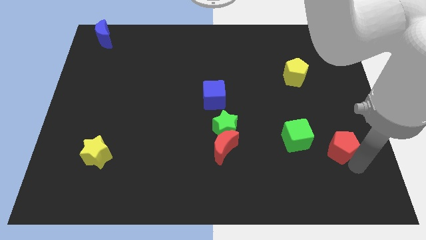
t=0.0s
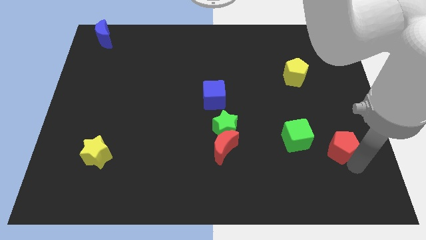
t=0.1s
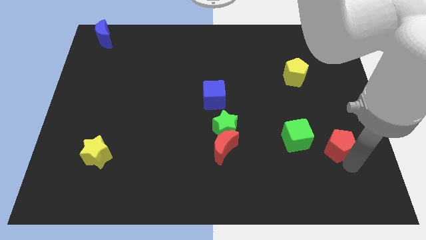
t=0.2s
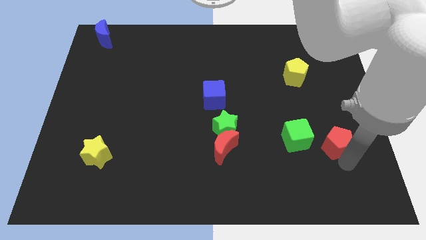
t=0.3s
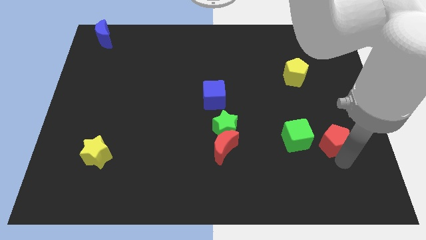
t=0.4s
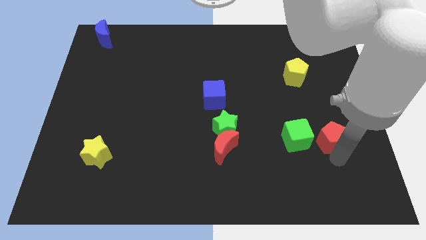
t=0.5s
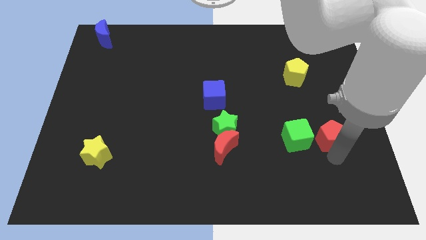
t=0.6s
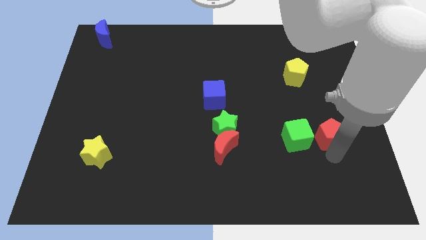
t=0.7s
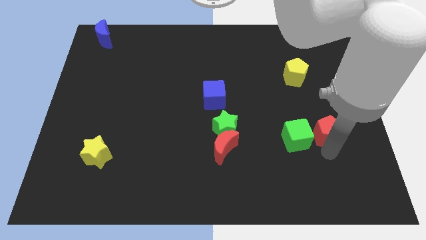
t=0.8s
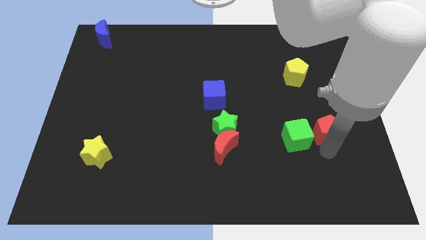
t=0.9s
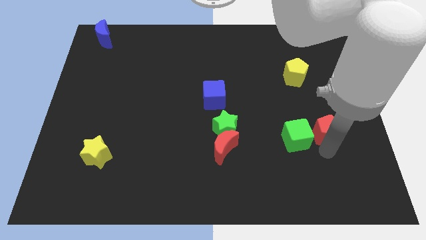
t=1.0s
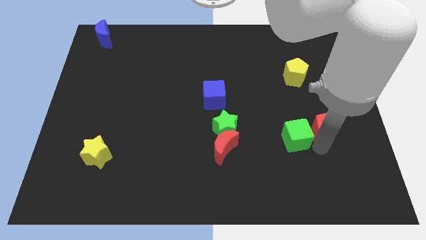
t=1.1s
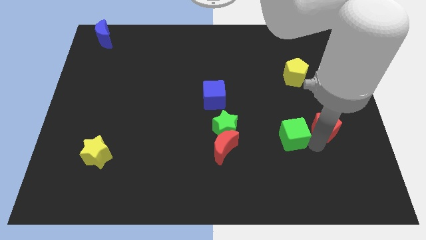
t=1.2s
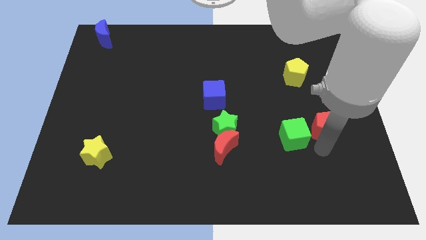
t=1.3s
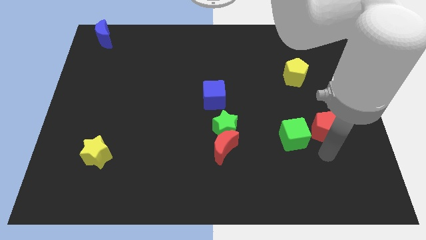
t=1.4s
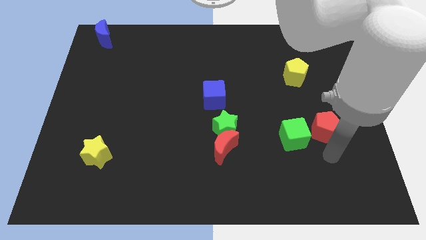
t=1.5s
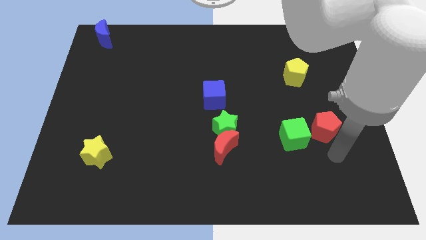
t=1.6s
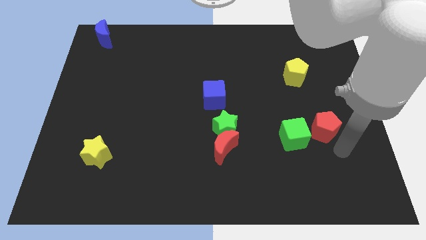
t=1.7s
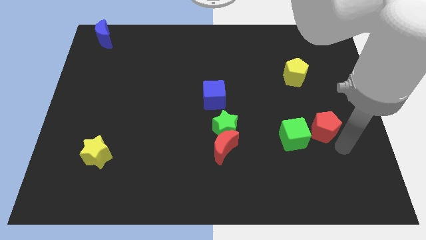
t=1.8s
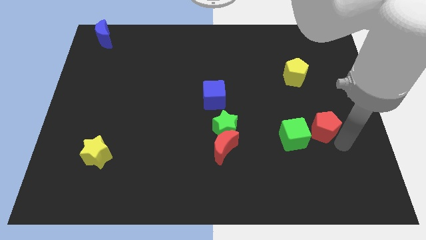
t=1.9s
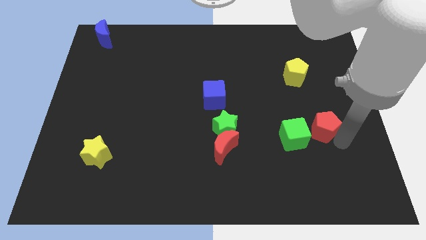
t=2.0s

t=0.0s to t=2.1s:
move the red pentagon to the right of the green cube

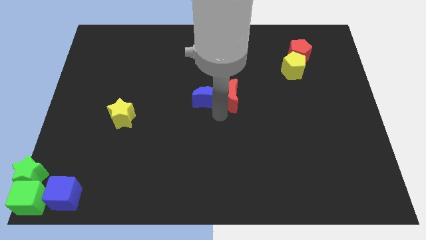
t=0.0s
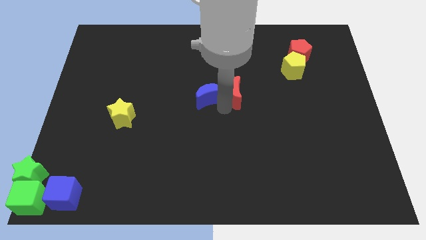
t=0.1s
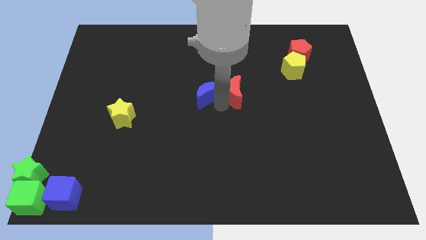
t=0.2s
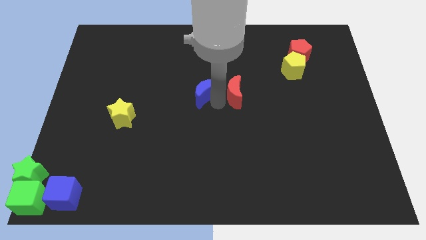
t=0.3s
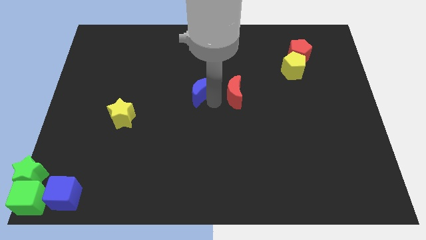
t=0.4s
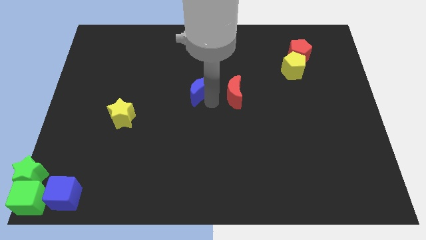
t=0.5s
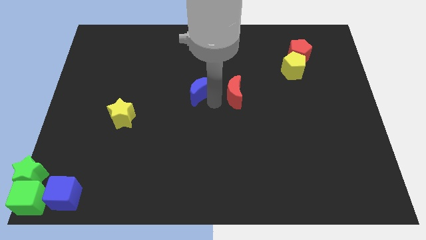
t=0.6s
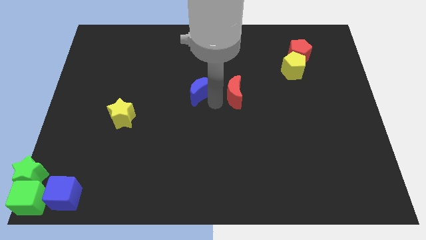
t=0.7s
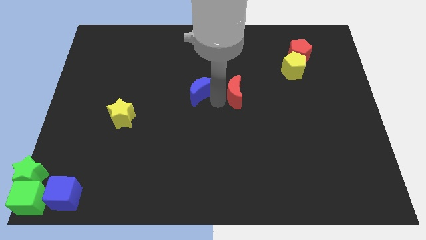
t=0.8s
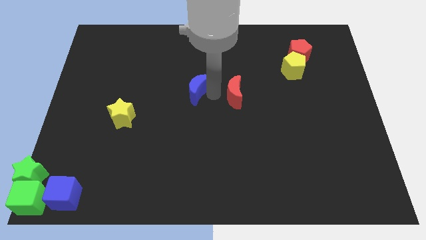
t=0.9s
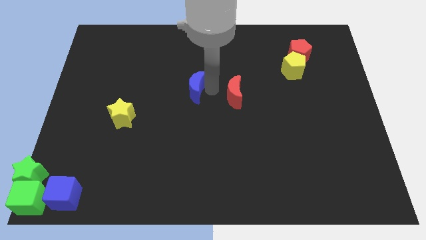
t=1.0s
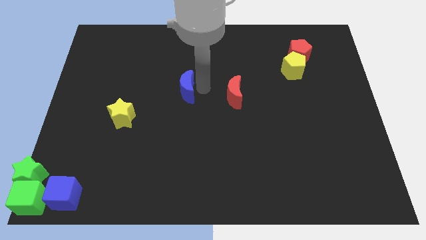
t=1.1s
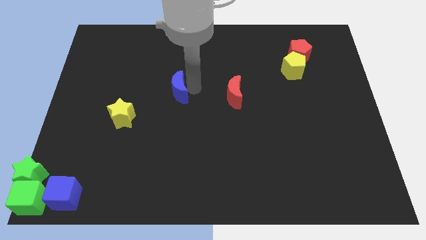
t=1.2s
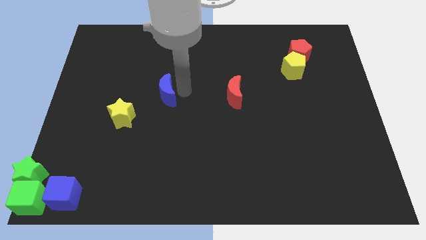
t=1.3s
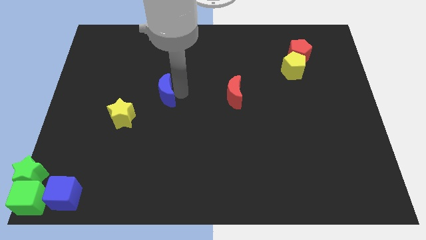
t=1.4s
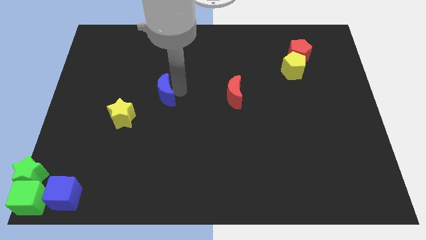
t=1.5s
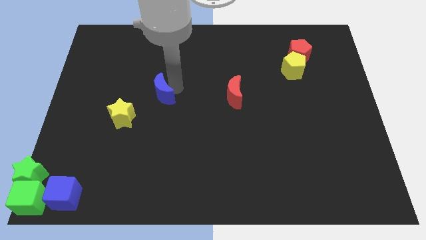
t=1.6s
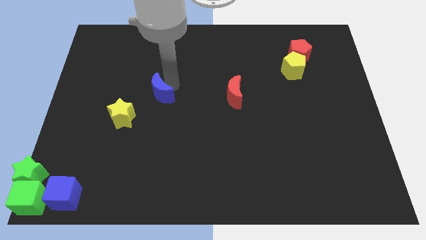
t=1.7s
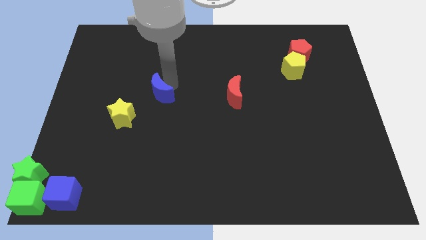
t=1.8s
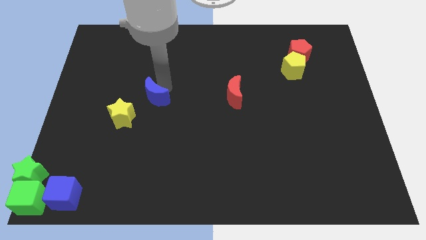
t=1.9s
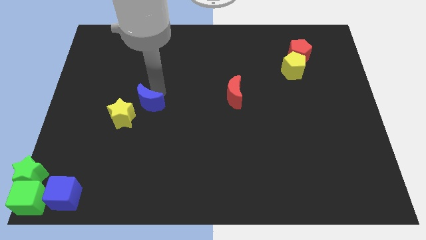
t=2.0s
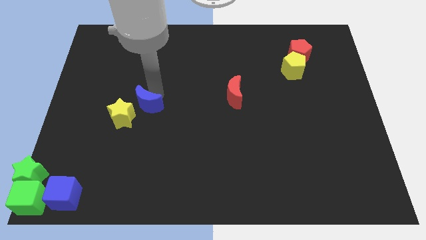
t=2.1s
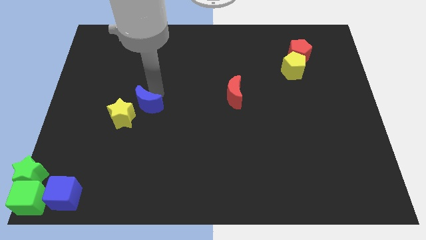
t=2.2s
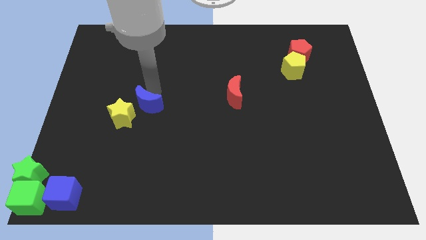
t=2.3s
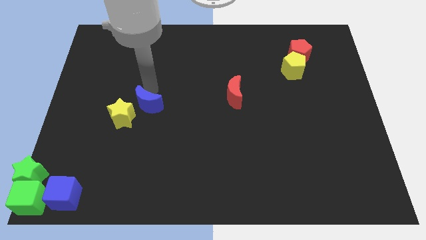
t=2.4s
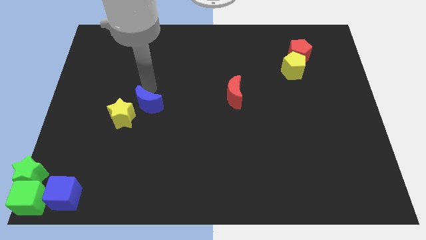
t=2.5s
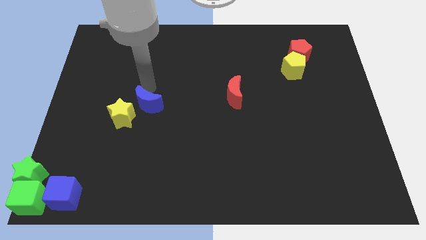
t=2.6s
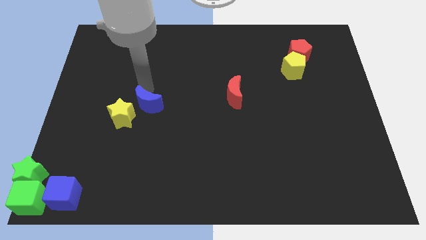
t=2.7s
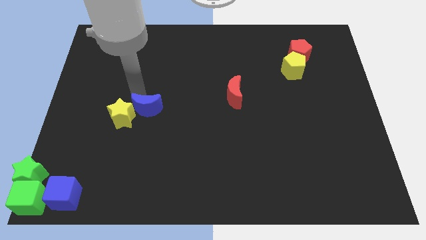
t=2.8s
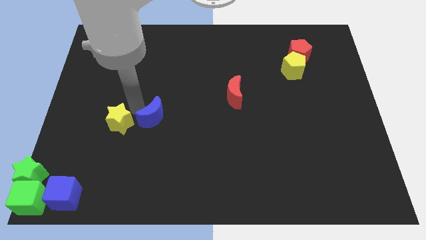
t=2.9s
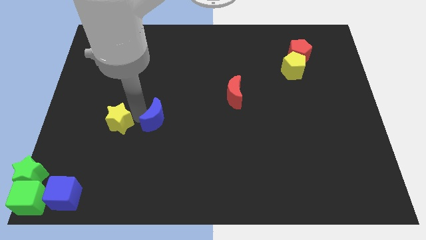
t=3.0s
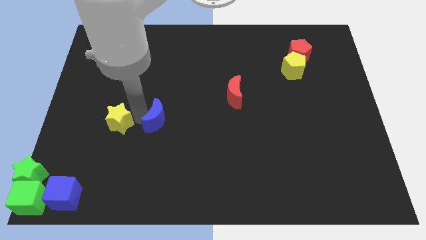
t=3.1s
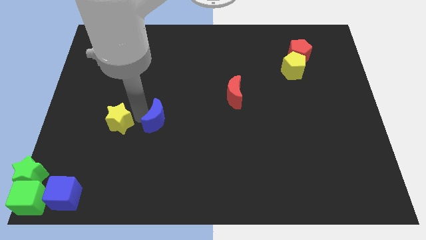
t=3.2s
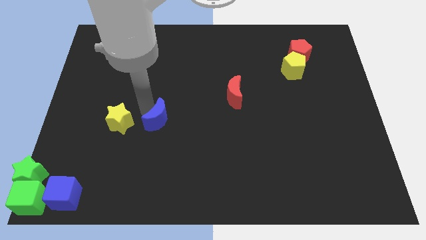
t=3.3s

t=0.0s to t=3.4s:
place blue moon near yellow star

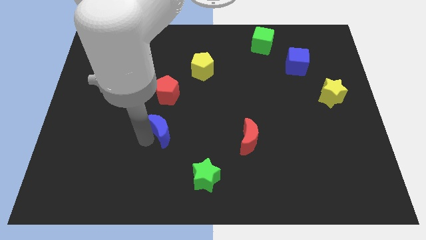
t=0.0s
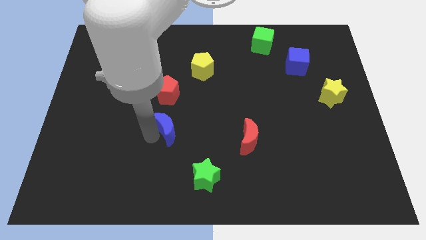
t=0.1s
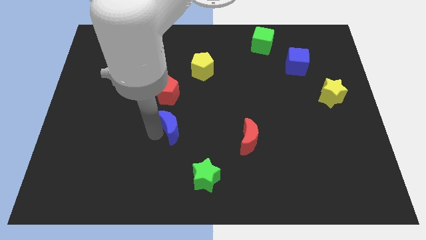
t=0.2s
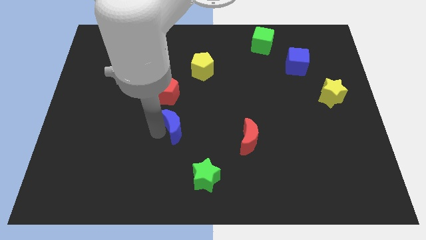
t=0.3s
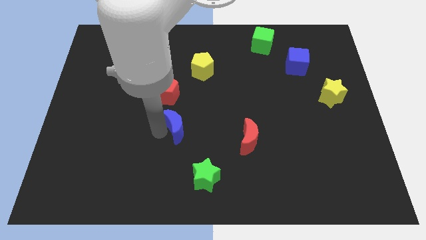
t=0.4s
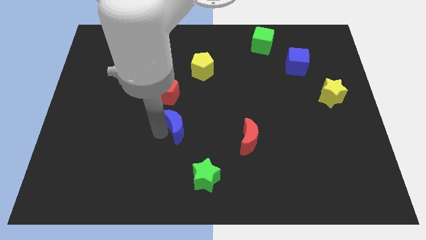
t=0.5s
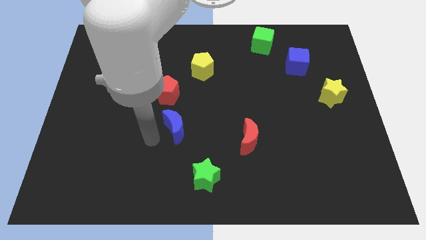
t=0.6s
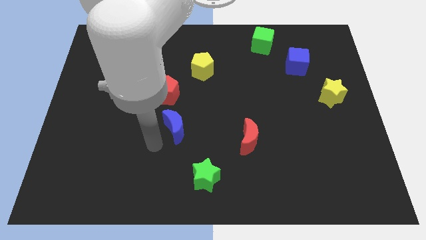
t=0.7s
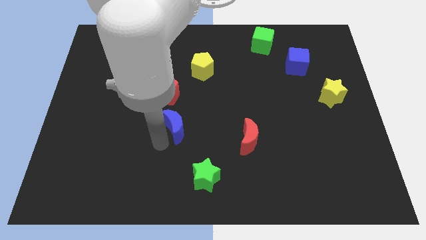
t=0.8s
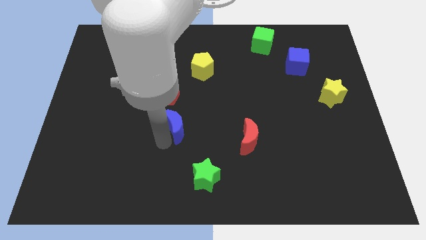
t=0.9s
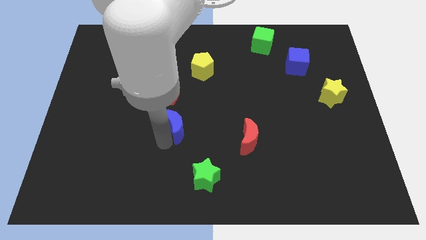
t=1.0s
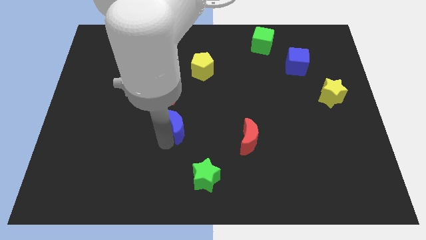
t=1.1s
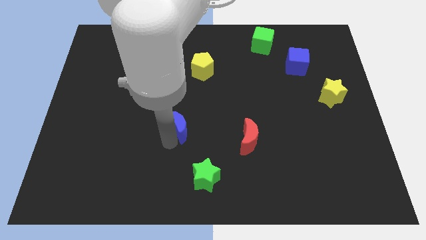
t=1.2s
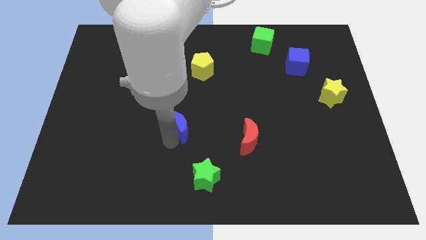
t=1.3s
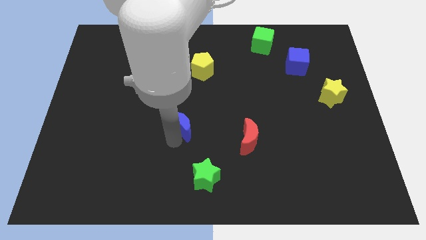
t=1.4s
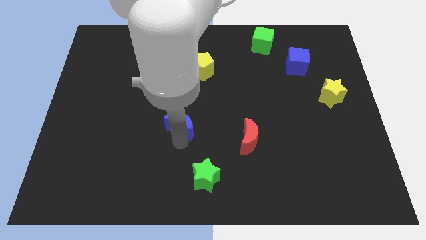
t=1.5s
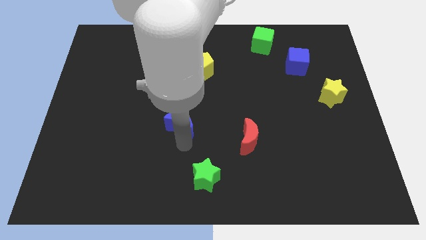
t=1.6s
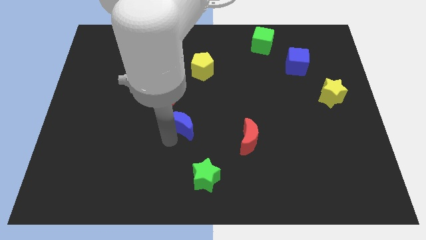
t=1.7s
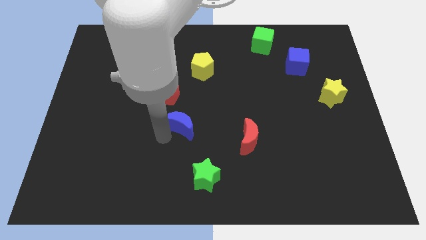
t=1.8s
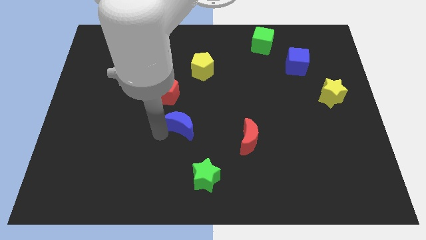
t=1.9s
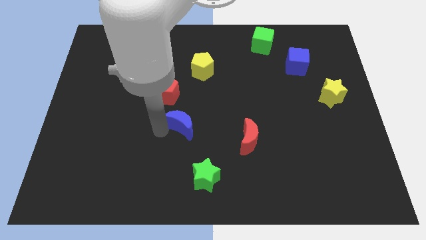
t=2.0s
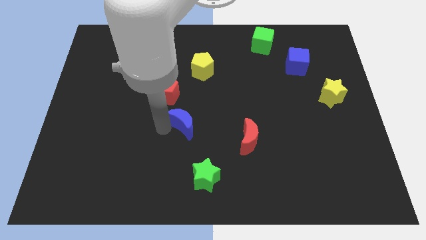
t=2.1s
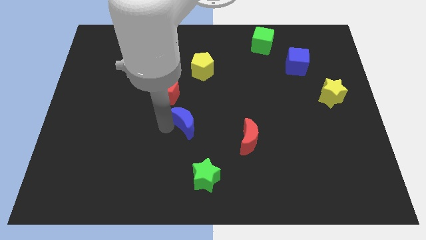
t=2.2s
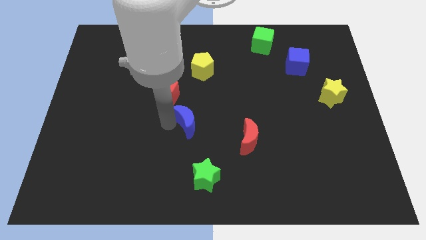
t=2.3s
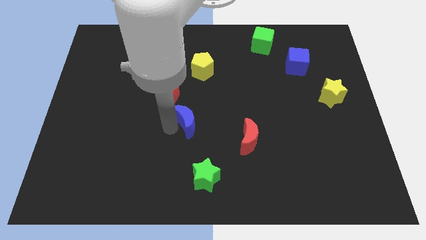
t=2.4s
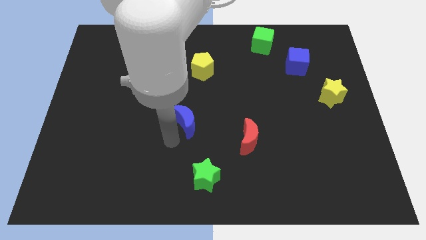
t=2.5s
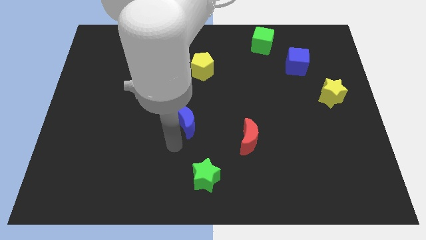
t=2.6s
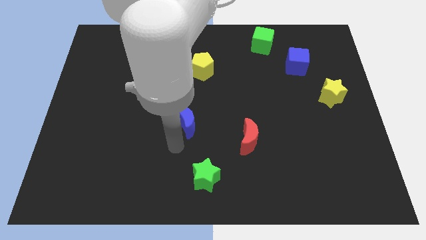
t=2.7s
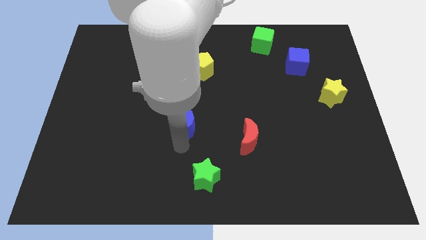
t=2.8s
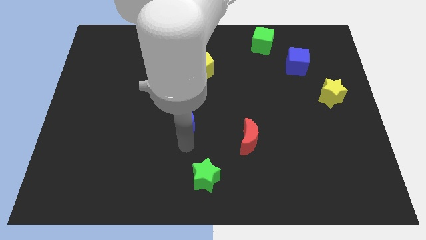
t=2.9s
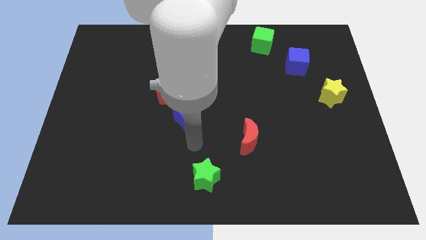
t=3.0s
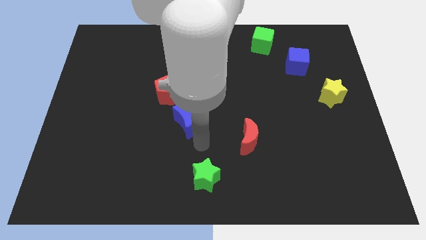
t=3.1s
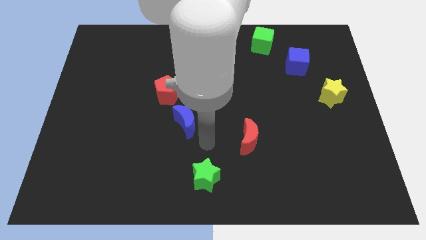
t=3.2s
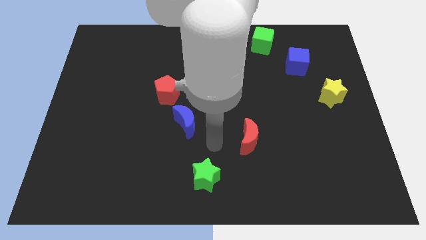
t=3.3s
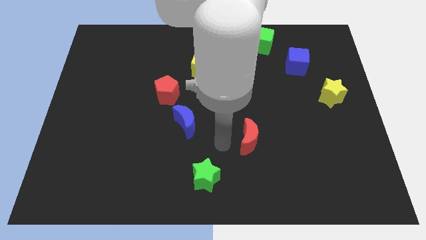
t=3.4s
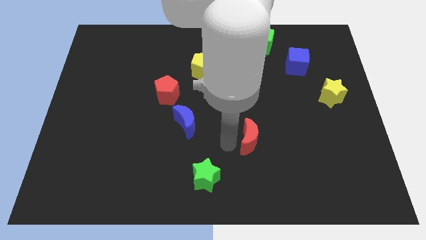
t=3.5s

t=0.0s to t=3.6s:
place the blue crescent diagonally to the bottom right of the red pentagon

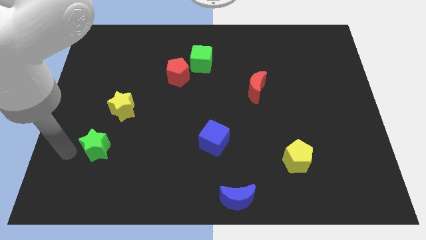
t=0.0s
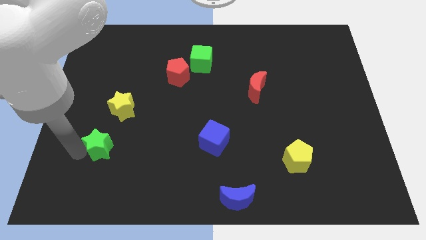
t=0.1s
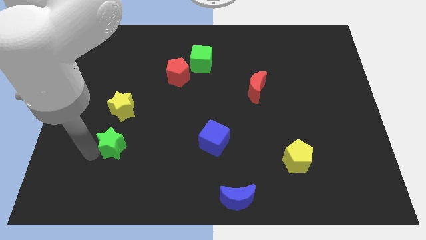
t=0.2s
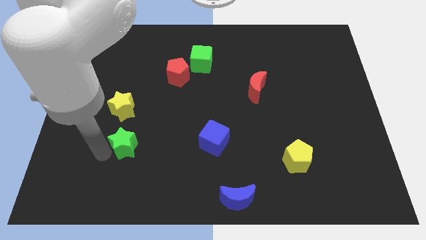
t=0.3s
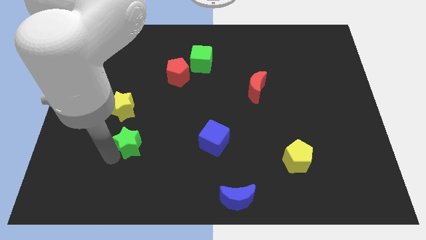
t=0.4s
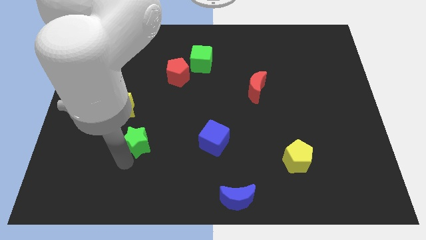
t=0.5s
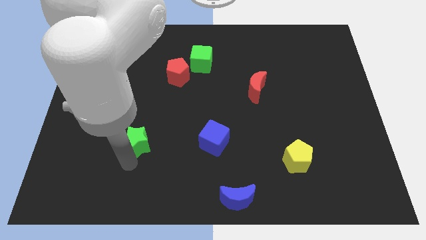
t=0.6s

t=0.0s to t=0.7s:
push green star to the right
